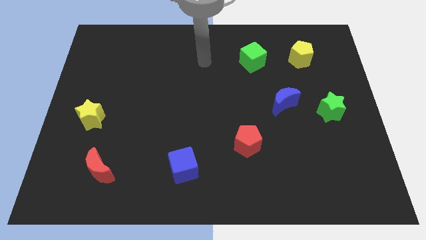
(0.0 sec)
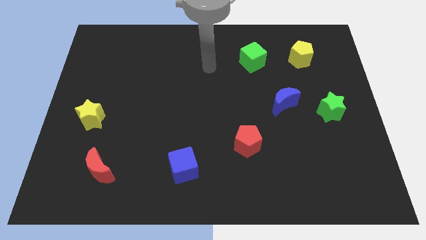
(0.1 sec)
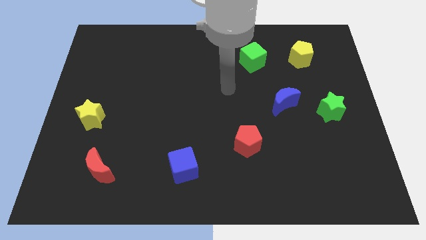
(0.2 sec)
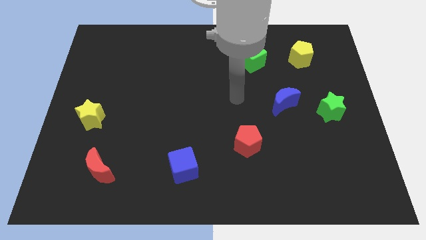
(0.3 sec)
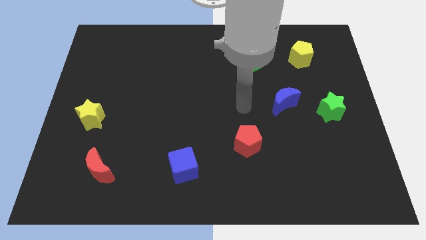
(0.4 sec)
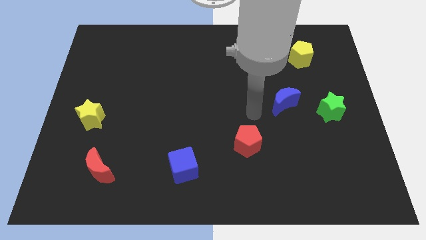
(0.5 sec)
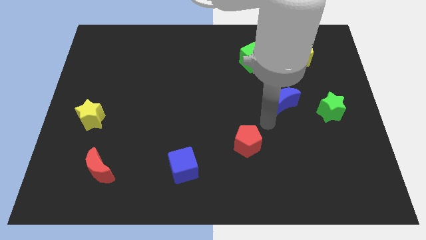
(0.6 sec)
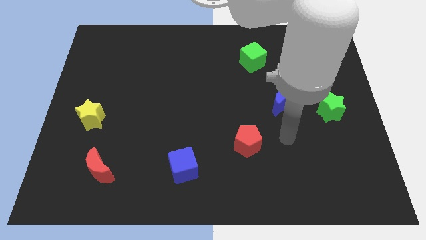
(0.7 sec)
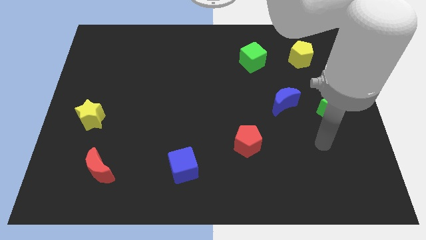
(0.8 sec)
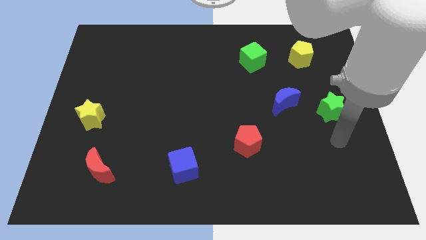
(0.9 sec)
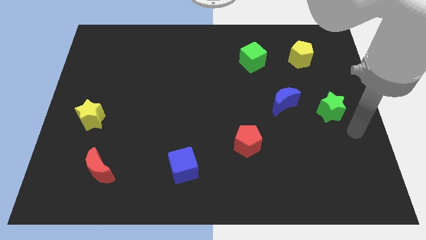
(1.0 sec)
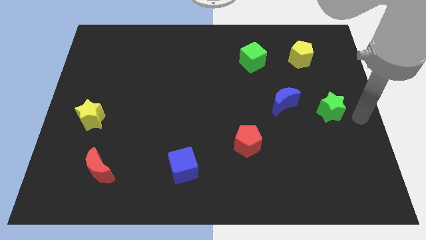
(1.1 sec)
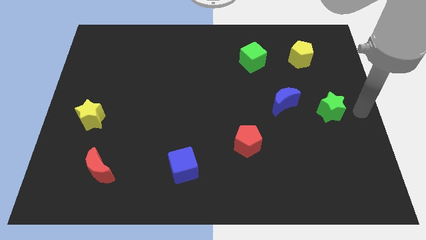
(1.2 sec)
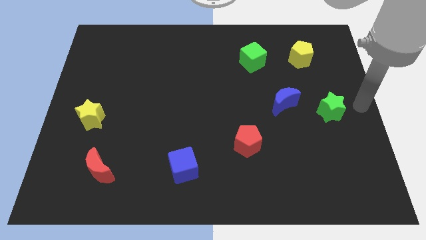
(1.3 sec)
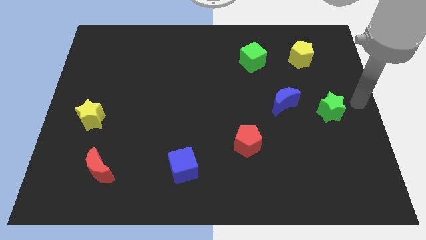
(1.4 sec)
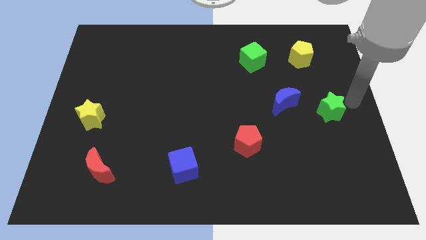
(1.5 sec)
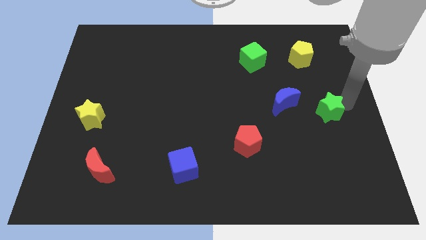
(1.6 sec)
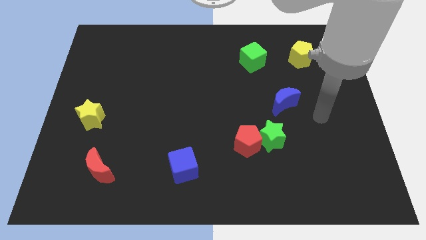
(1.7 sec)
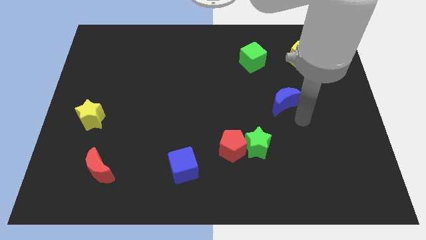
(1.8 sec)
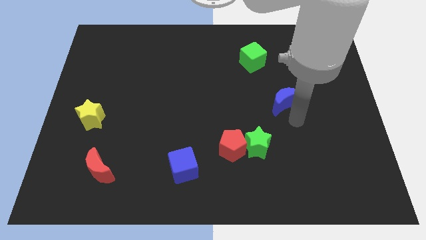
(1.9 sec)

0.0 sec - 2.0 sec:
put the green star to the red pentagon

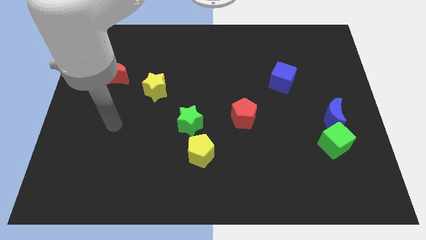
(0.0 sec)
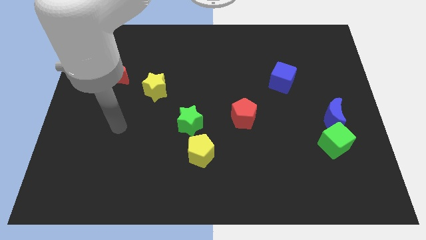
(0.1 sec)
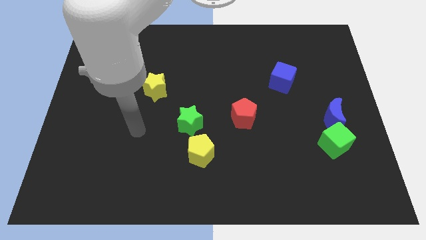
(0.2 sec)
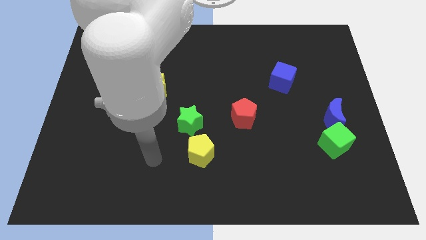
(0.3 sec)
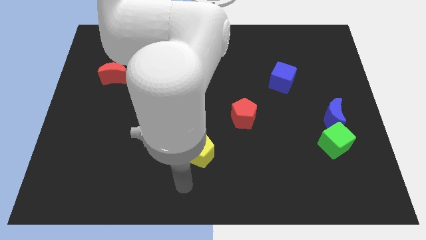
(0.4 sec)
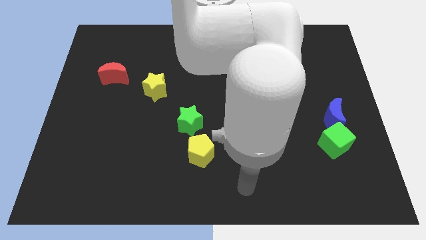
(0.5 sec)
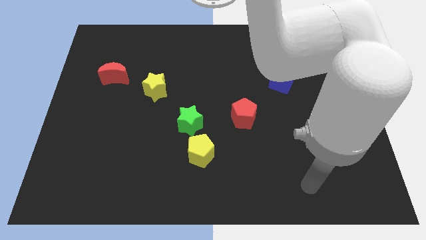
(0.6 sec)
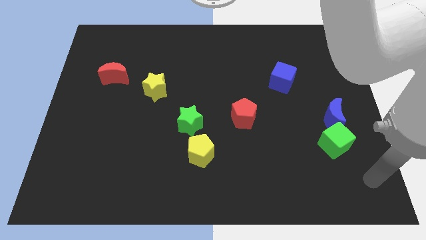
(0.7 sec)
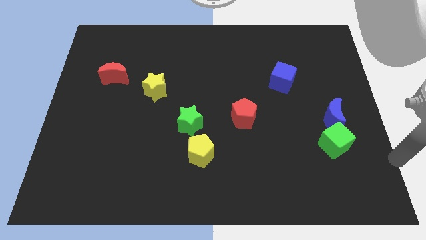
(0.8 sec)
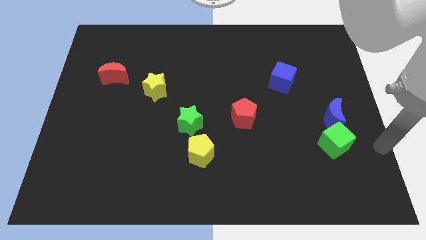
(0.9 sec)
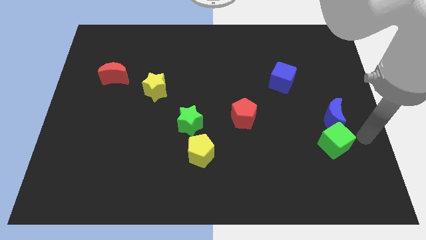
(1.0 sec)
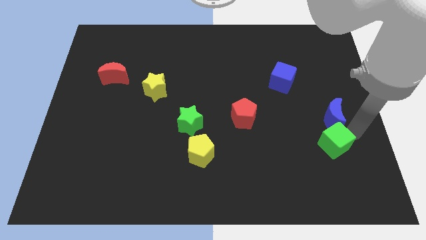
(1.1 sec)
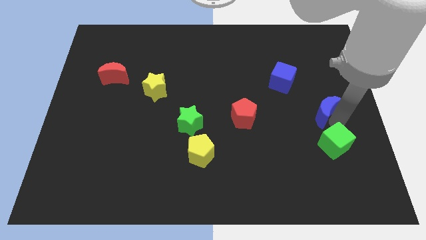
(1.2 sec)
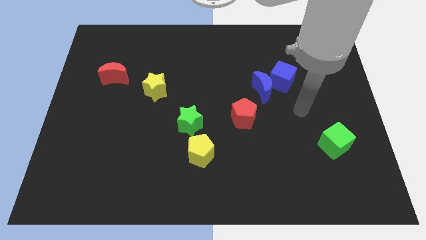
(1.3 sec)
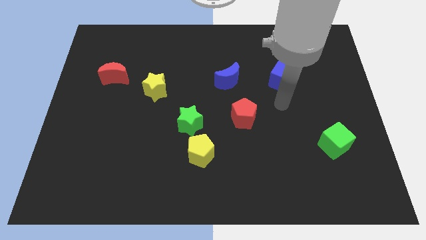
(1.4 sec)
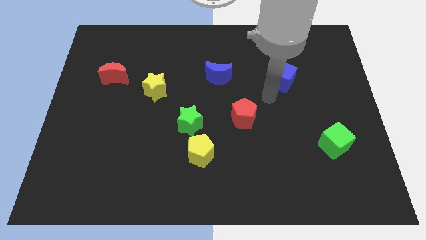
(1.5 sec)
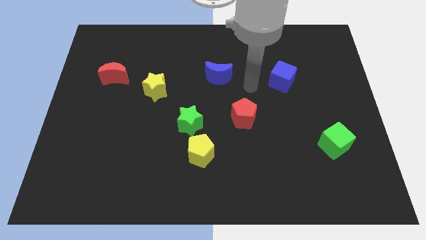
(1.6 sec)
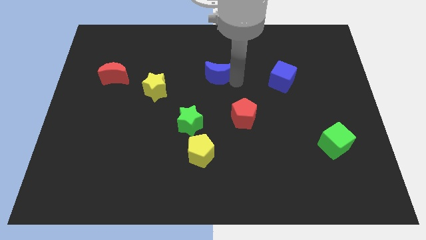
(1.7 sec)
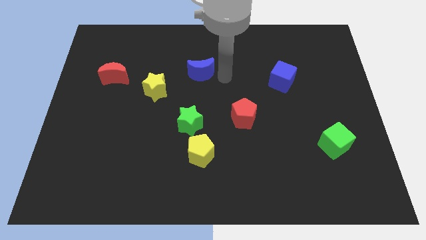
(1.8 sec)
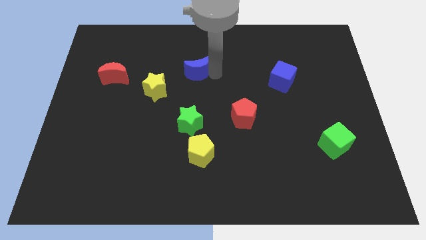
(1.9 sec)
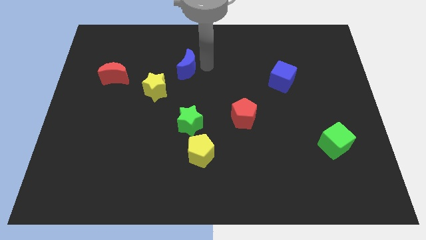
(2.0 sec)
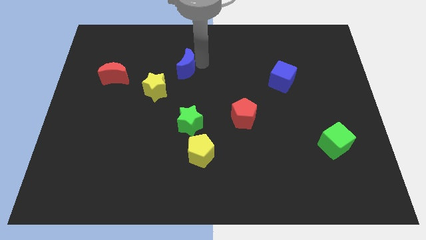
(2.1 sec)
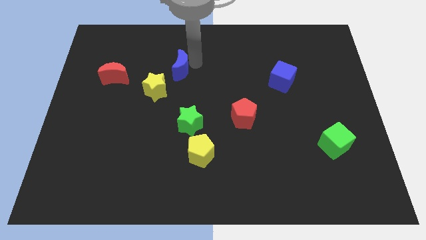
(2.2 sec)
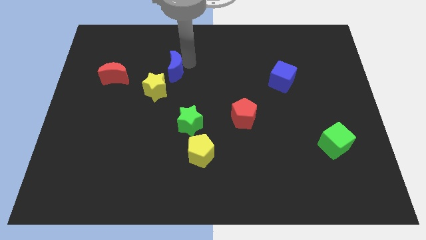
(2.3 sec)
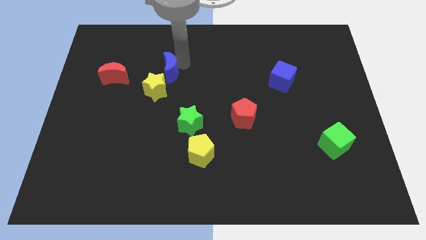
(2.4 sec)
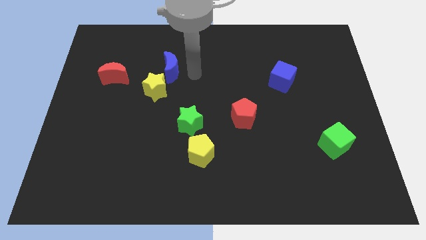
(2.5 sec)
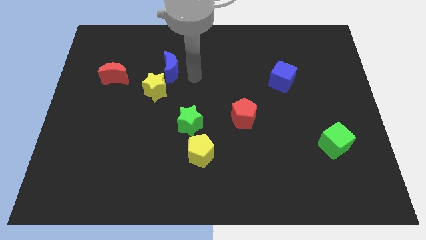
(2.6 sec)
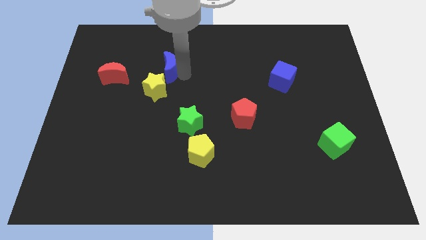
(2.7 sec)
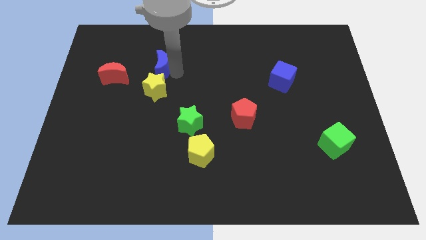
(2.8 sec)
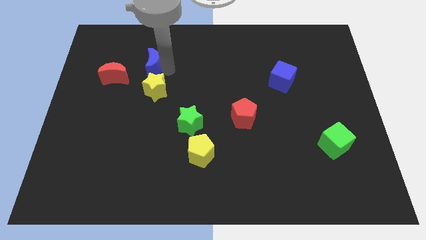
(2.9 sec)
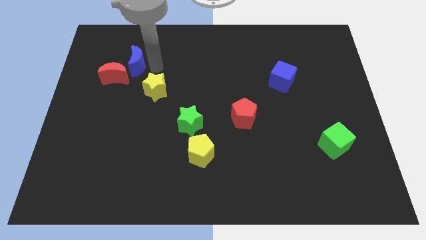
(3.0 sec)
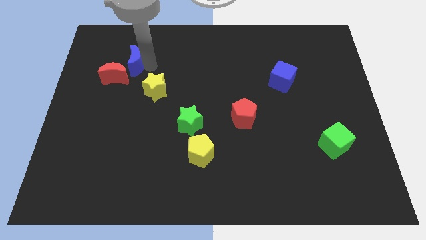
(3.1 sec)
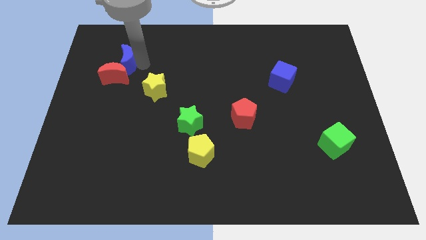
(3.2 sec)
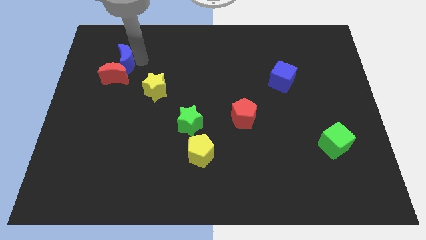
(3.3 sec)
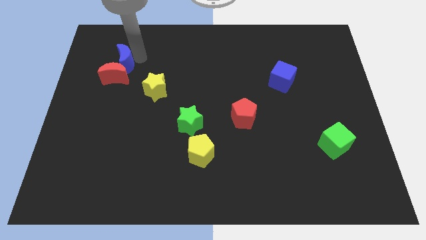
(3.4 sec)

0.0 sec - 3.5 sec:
move the blue moon close to the red moon

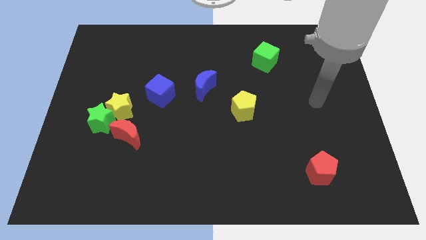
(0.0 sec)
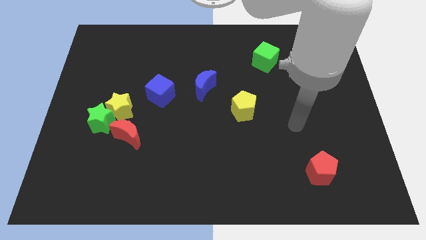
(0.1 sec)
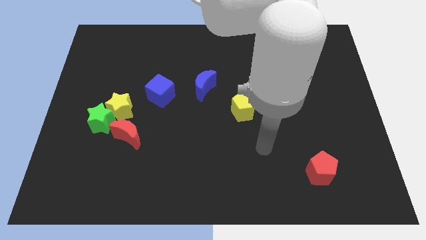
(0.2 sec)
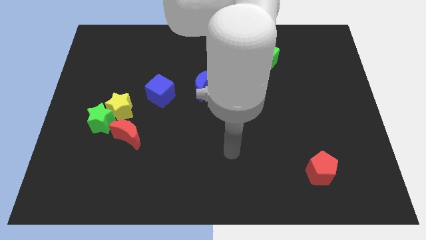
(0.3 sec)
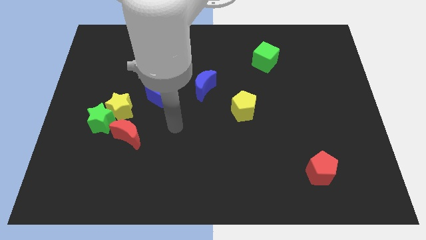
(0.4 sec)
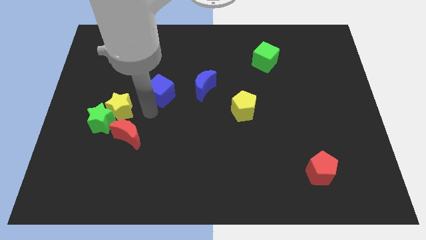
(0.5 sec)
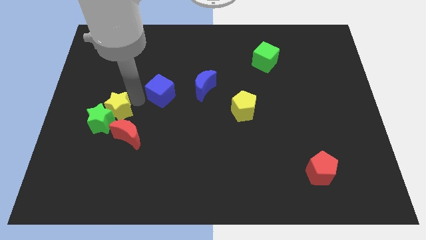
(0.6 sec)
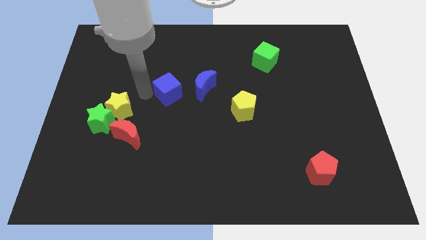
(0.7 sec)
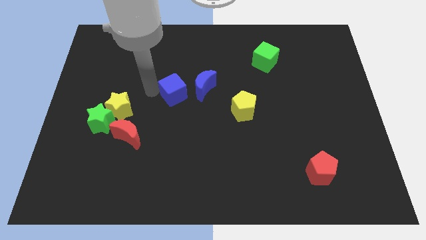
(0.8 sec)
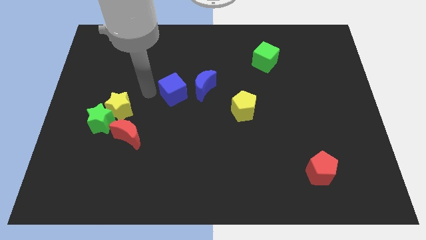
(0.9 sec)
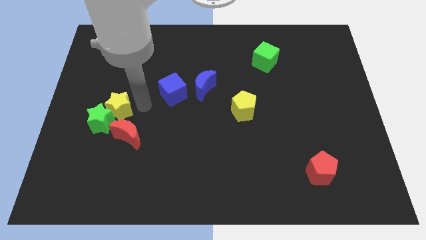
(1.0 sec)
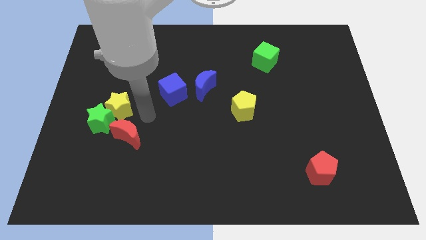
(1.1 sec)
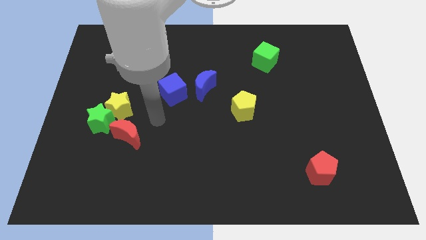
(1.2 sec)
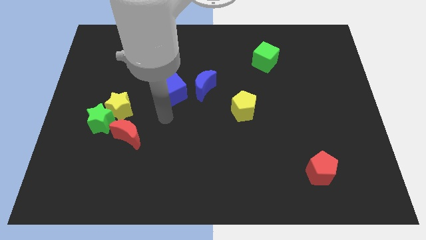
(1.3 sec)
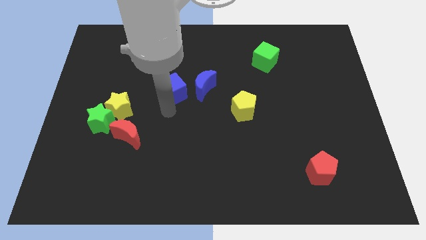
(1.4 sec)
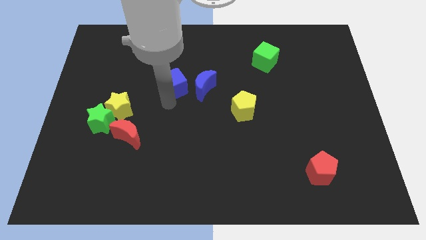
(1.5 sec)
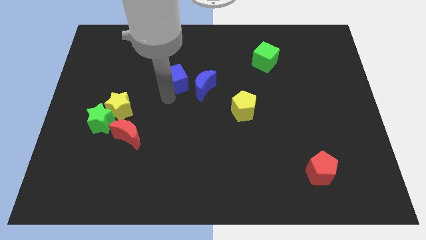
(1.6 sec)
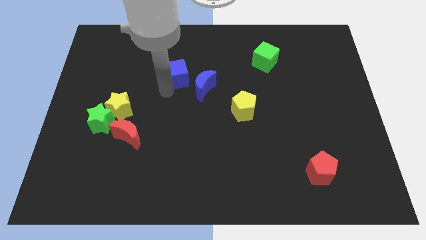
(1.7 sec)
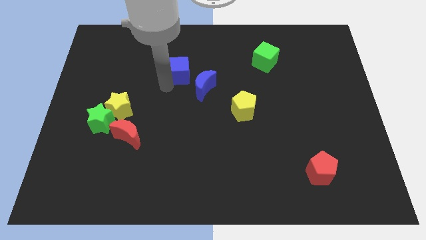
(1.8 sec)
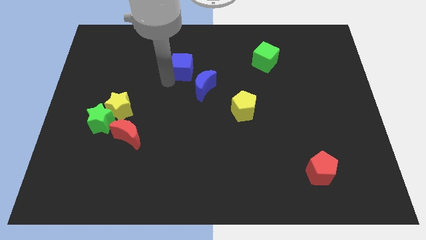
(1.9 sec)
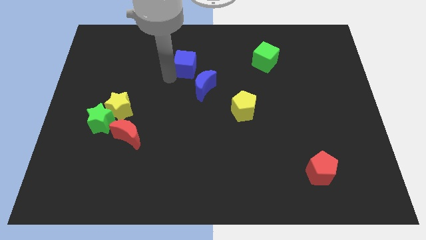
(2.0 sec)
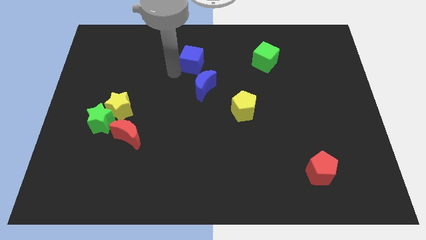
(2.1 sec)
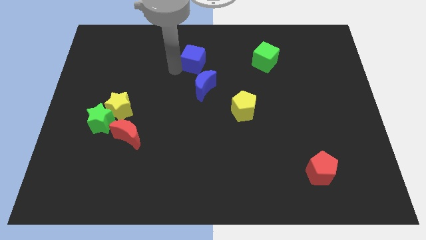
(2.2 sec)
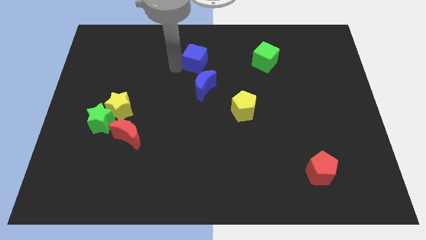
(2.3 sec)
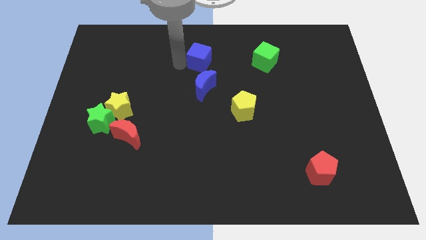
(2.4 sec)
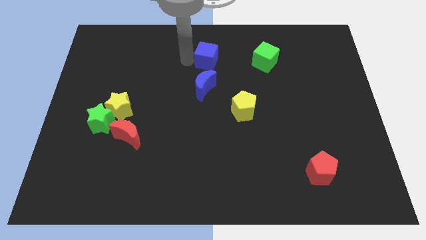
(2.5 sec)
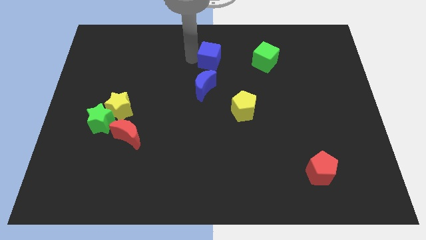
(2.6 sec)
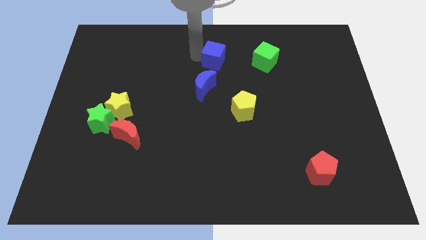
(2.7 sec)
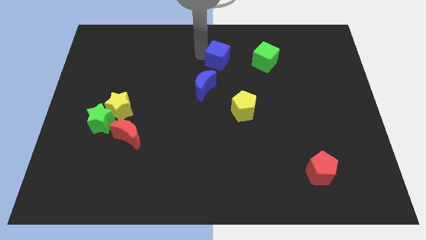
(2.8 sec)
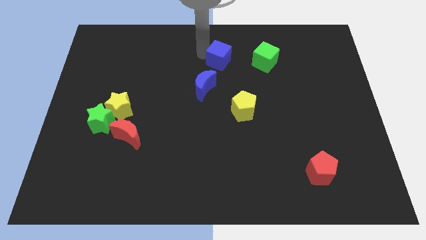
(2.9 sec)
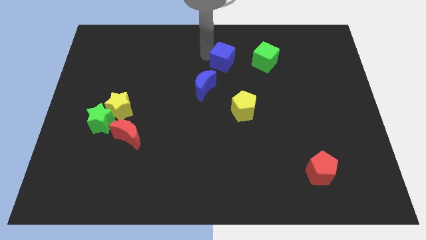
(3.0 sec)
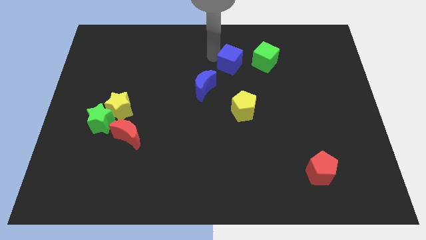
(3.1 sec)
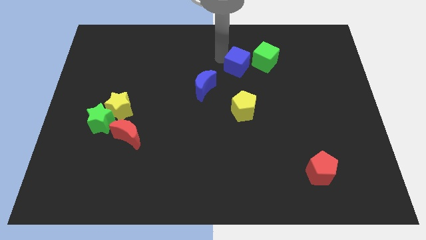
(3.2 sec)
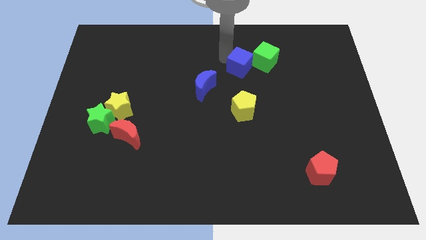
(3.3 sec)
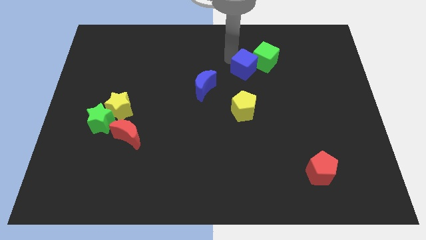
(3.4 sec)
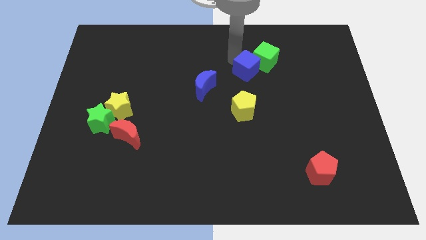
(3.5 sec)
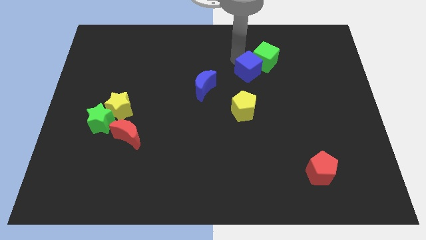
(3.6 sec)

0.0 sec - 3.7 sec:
move the blue cube to the green cube
